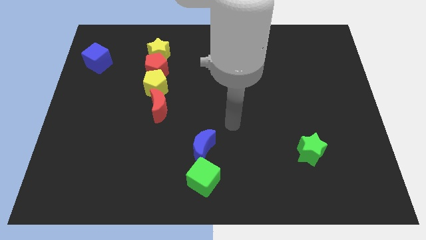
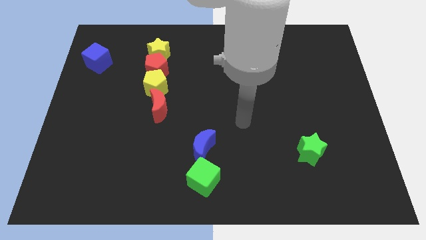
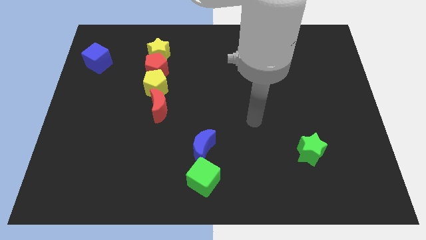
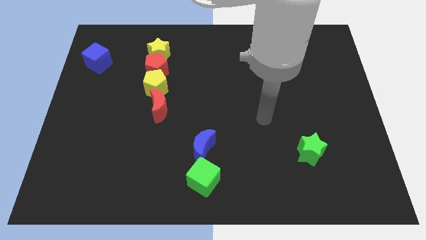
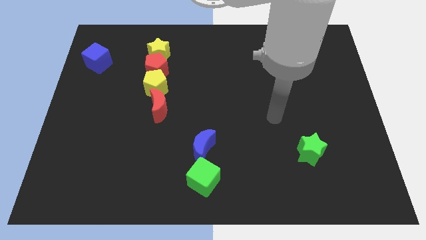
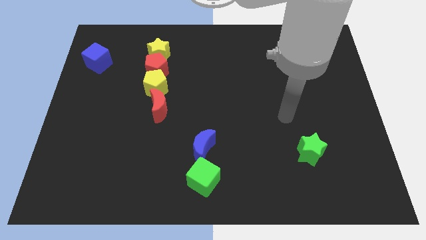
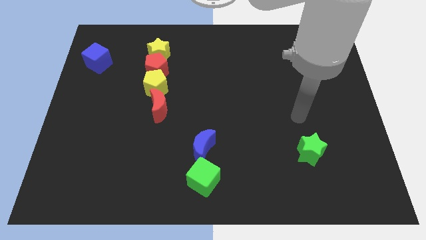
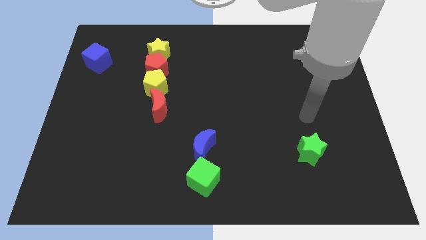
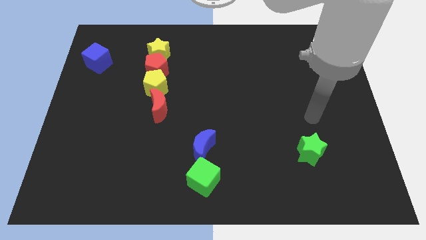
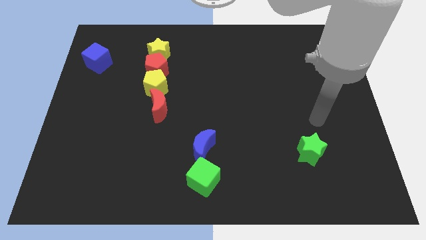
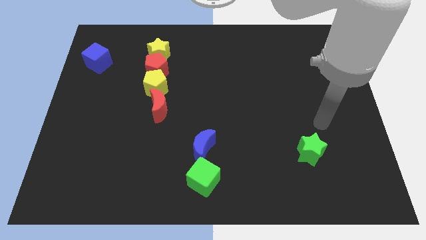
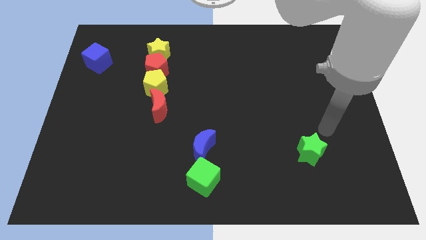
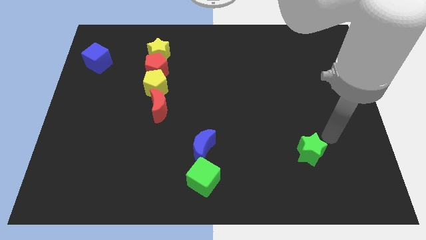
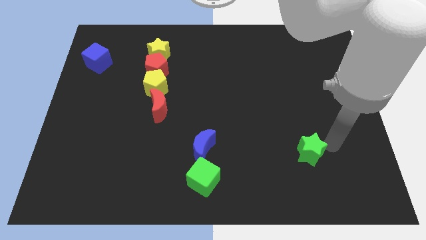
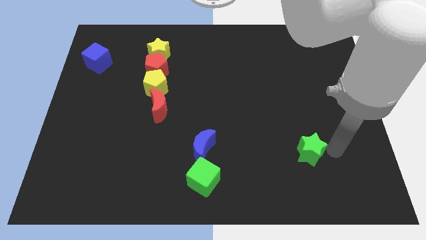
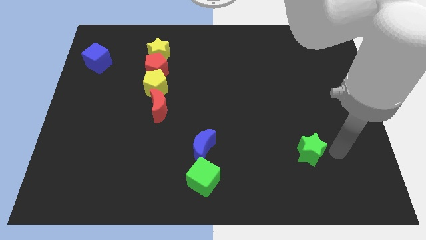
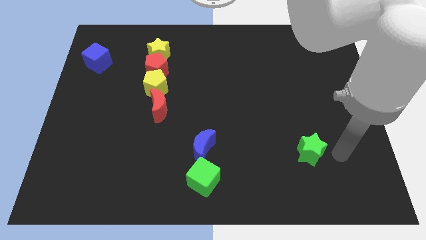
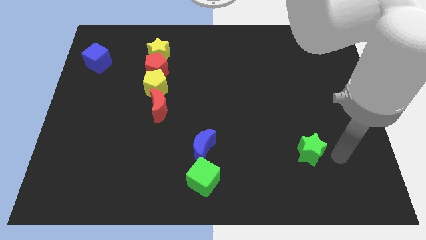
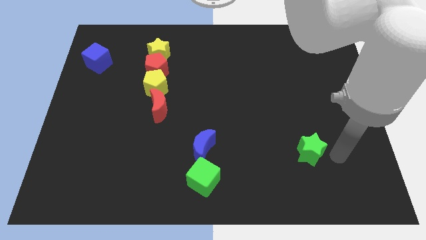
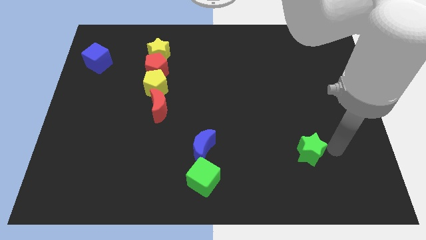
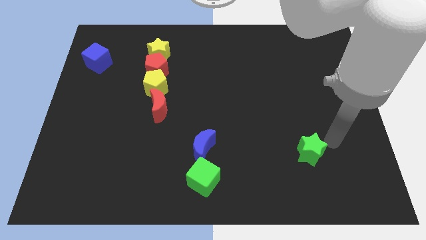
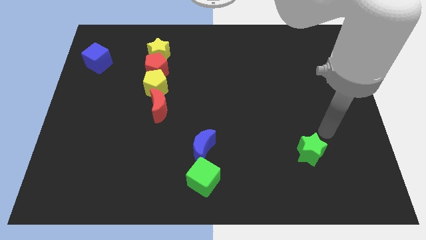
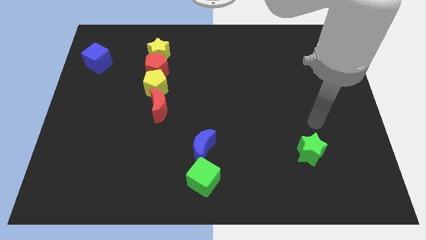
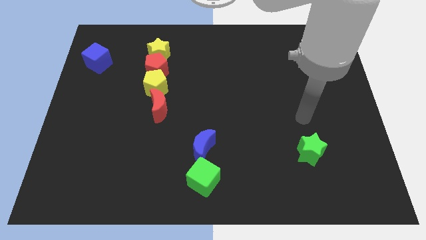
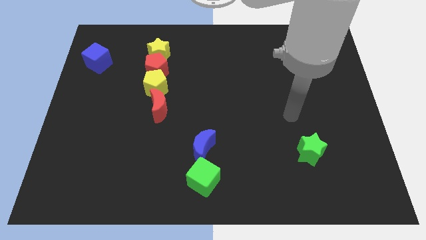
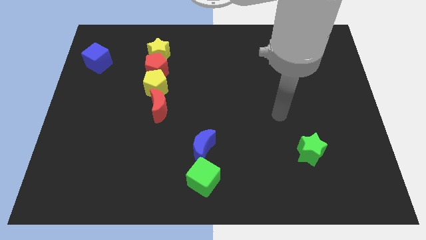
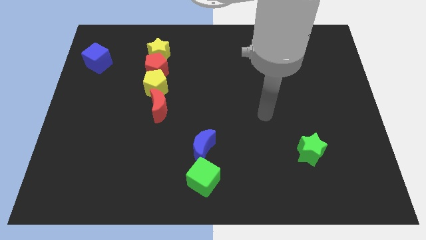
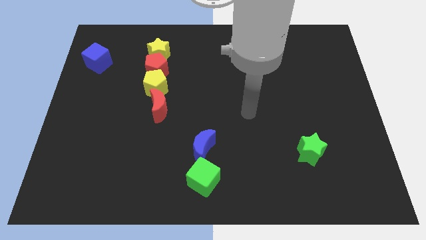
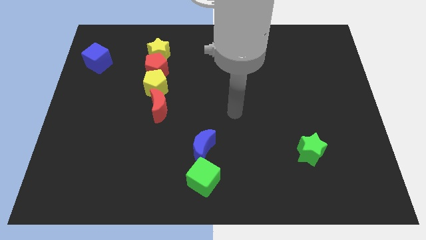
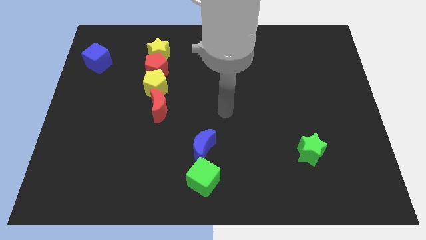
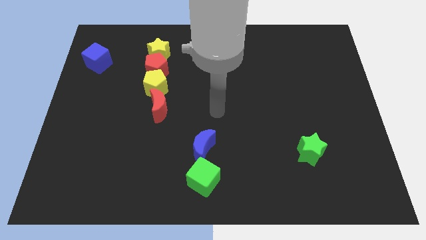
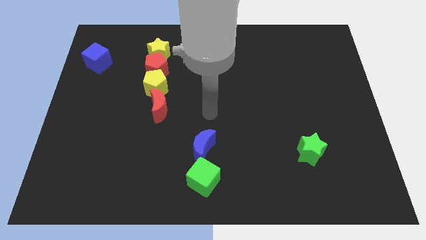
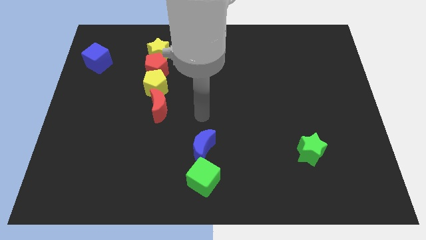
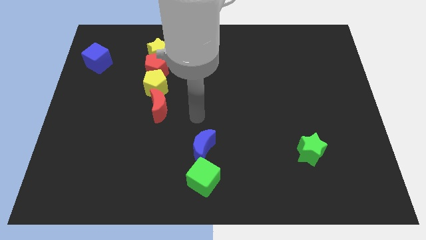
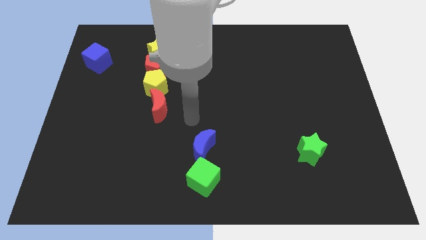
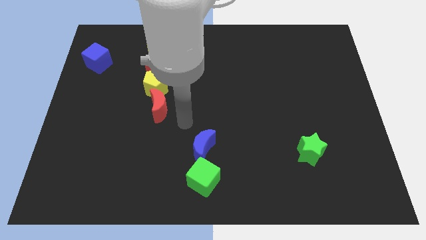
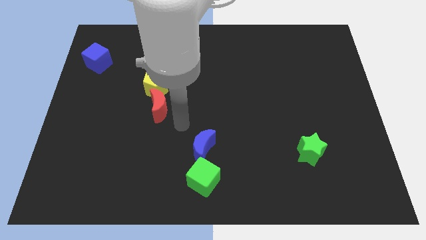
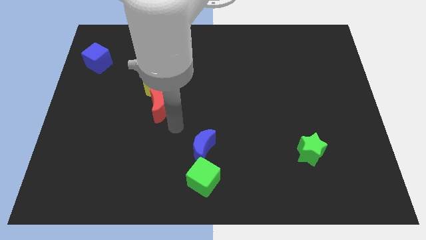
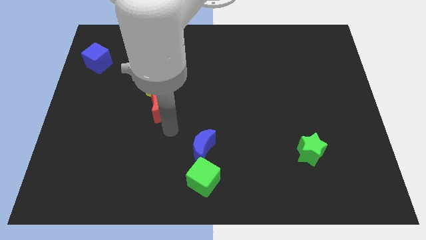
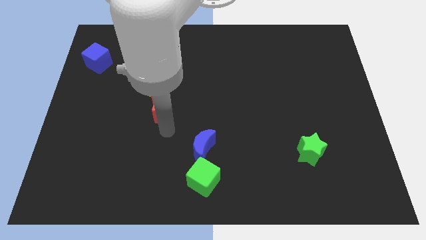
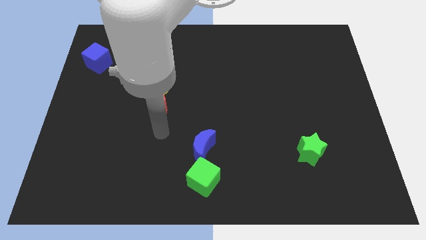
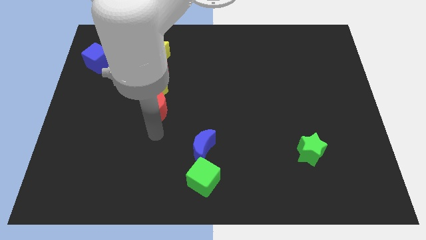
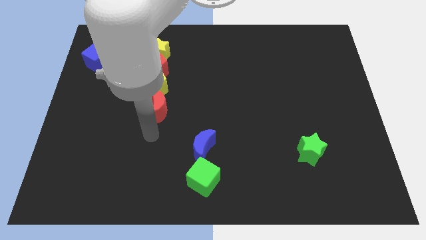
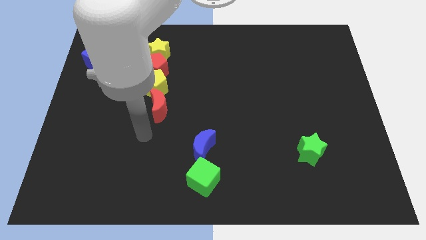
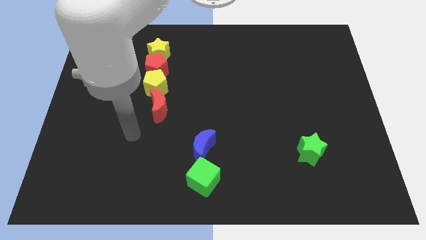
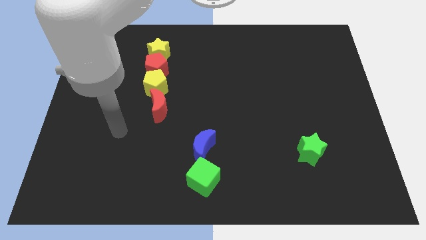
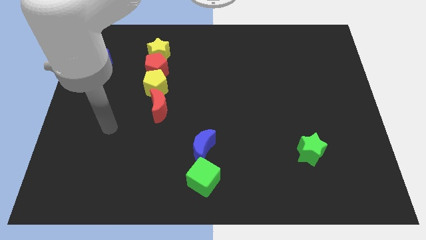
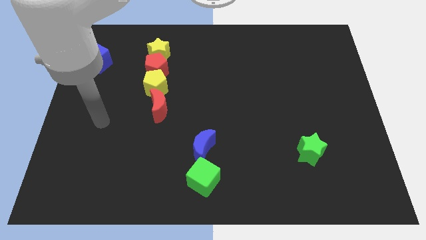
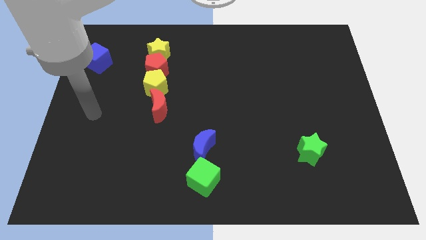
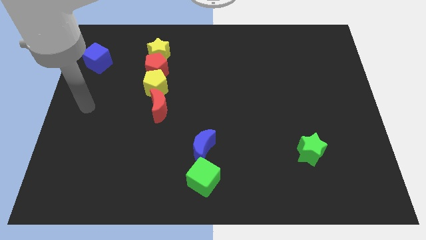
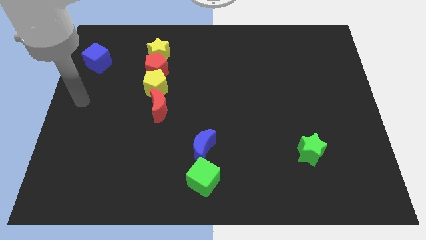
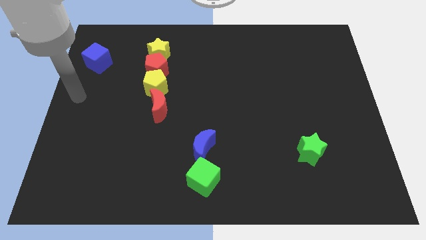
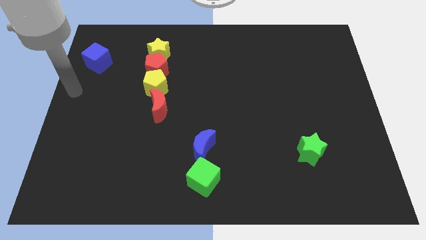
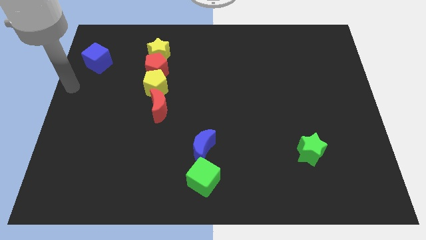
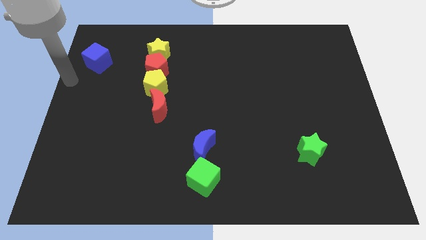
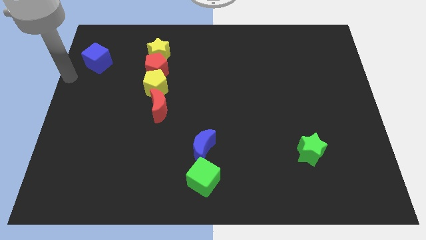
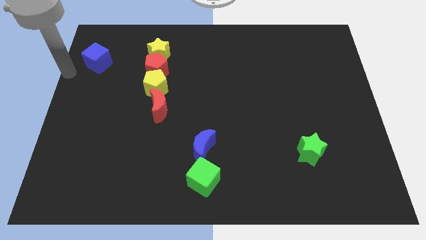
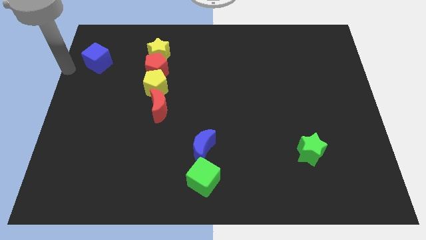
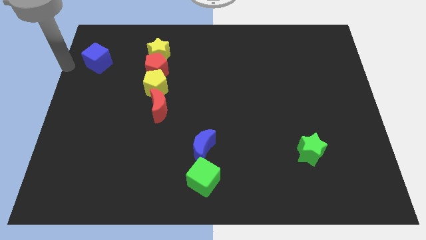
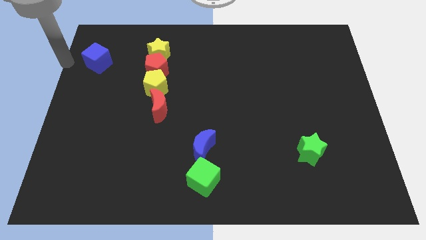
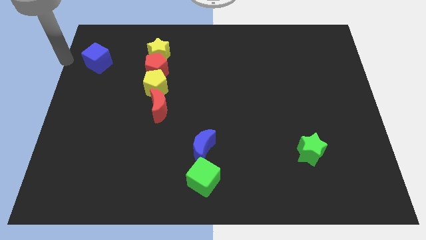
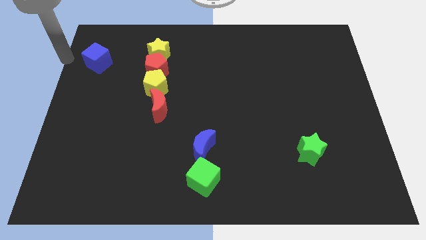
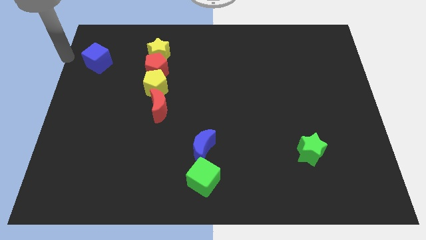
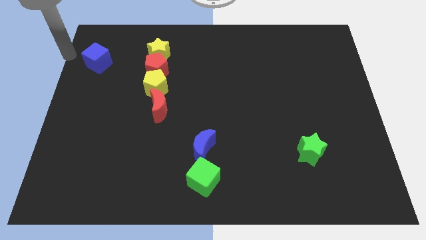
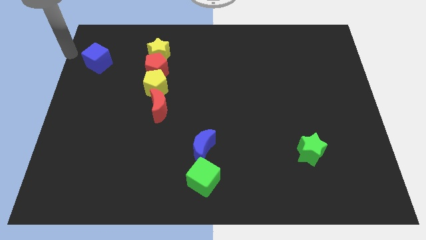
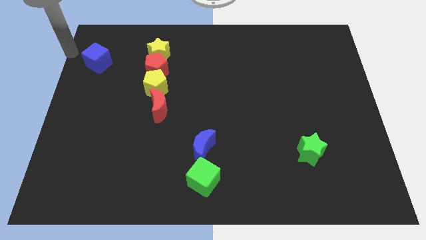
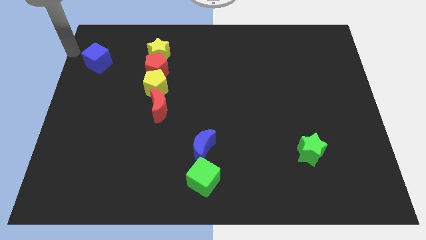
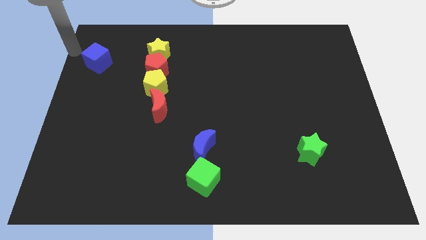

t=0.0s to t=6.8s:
move arm to the blue cube

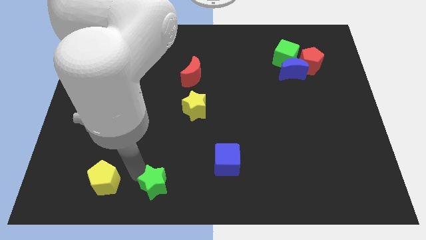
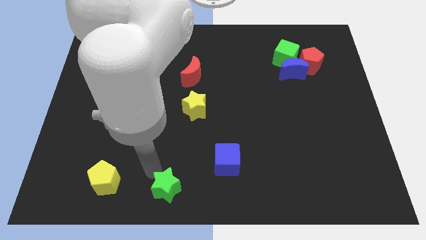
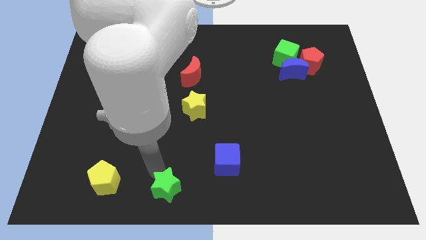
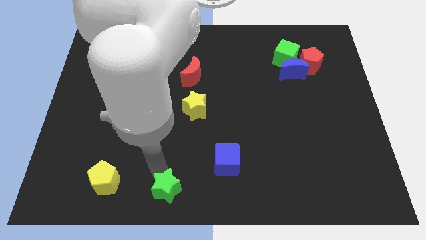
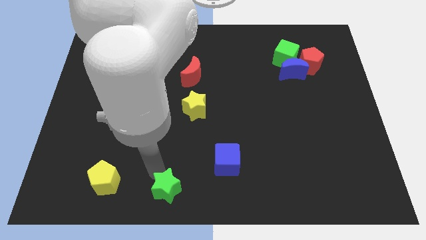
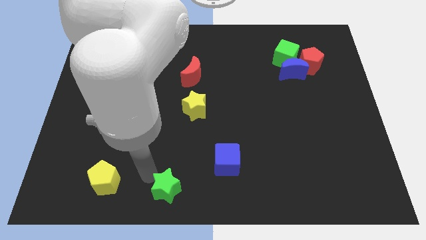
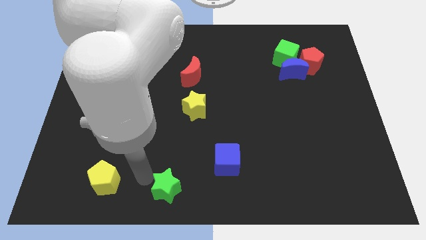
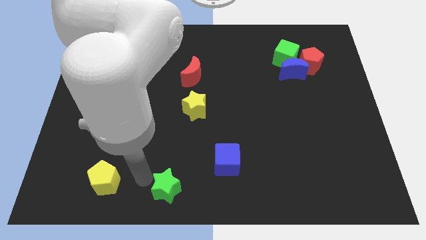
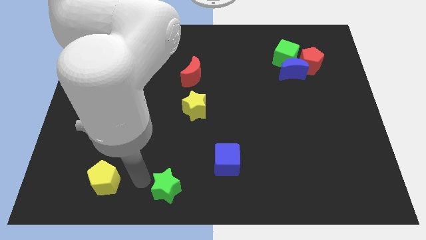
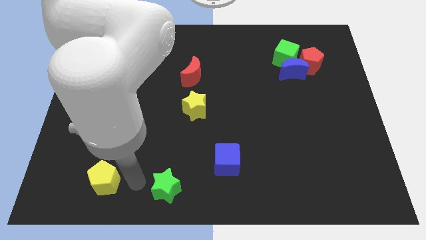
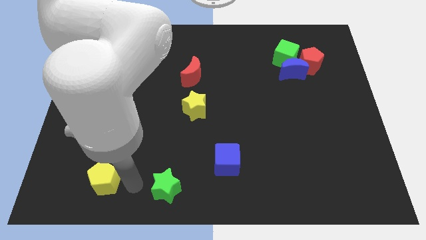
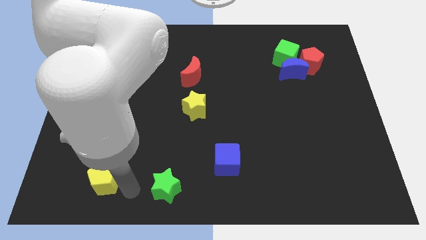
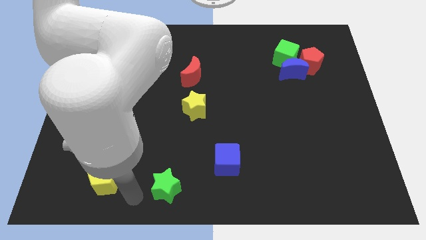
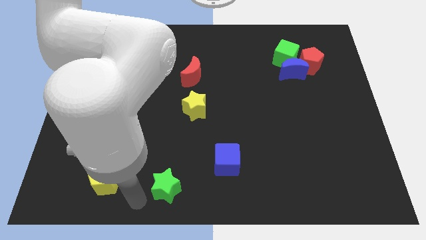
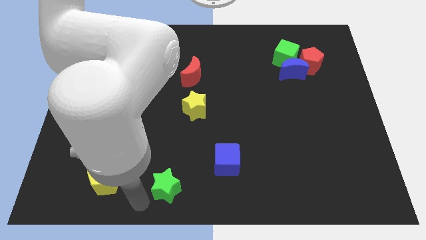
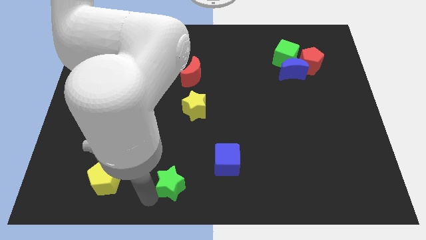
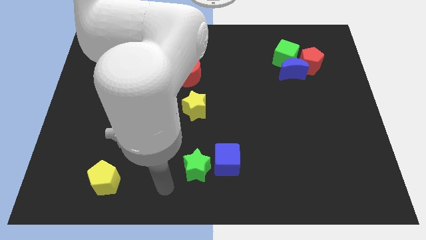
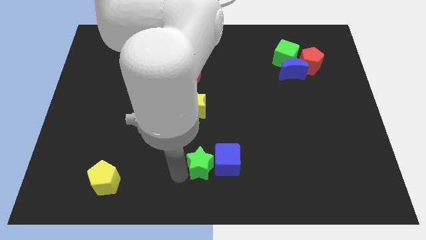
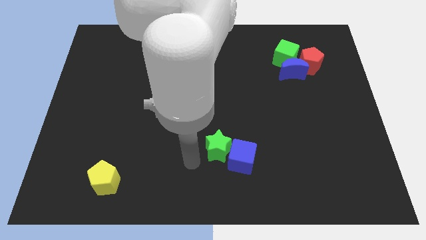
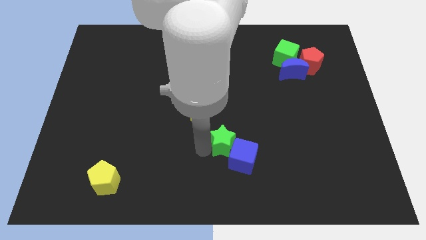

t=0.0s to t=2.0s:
push the green star into the blue cube

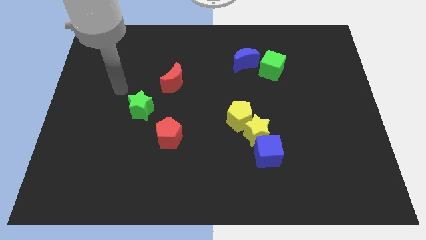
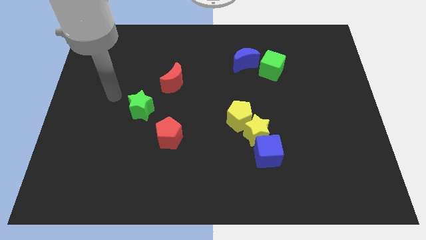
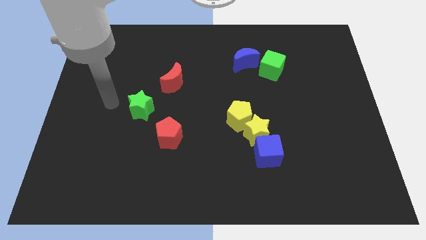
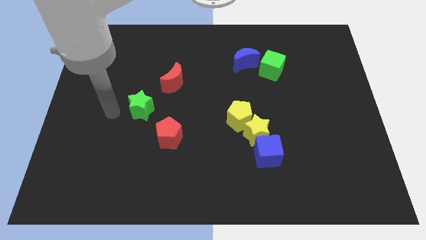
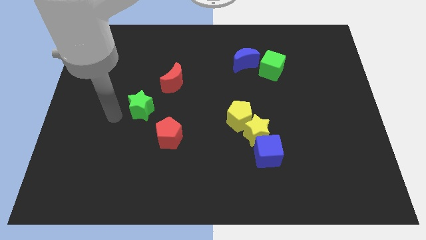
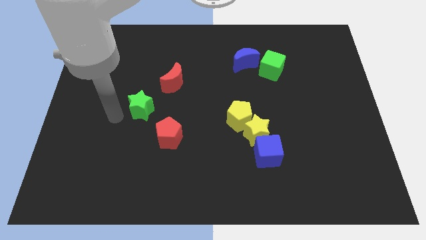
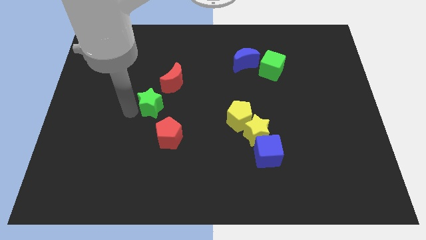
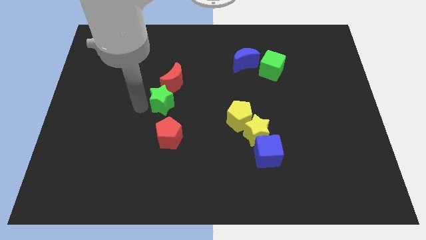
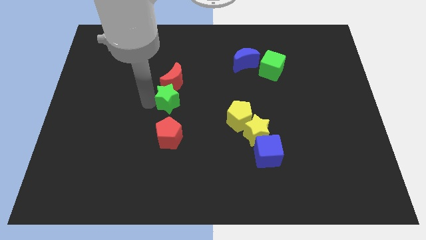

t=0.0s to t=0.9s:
place the green star in between the red moon and red pentagon
